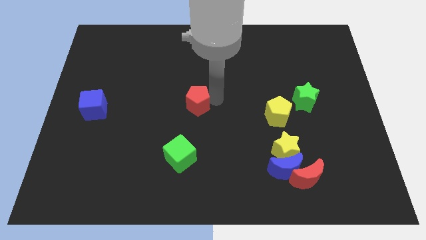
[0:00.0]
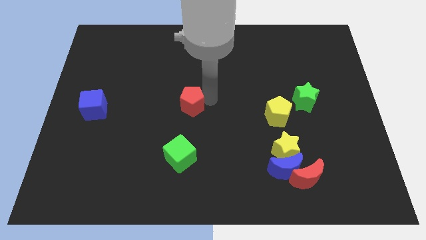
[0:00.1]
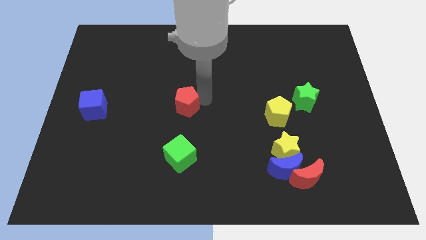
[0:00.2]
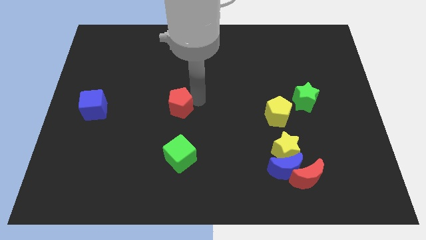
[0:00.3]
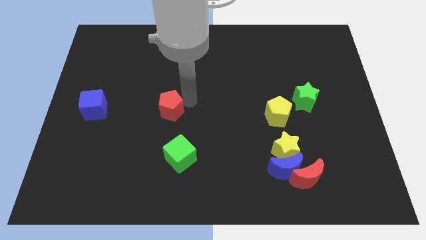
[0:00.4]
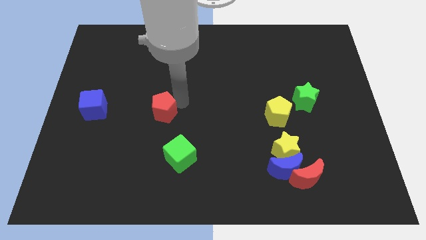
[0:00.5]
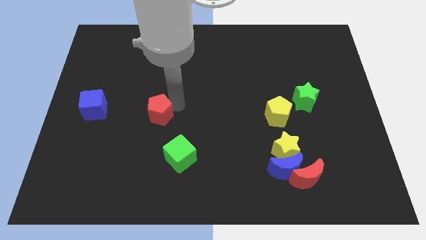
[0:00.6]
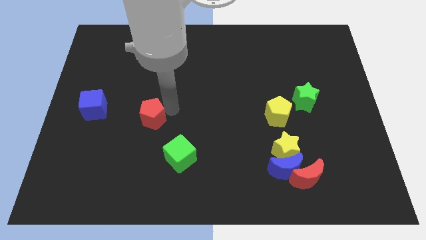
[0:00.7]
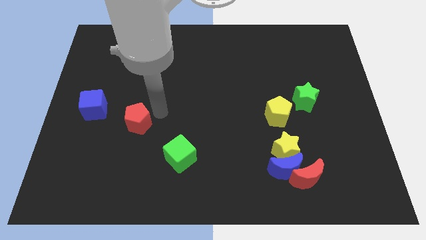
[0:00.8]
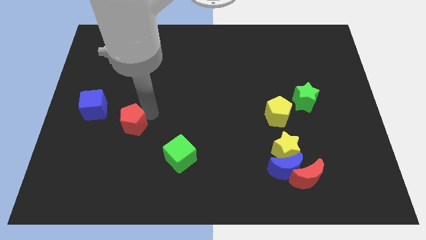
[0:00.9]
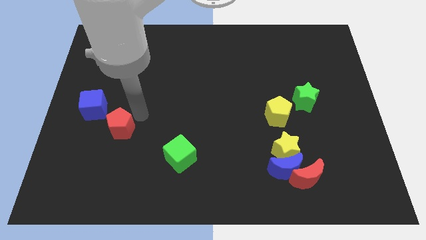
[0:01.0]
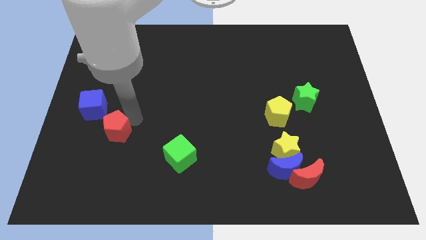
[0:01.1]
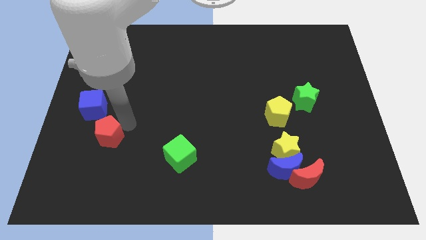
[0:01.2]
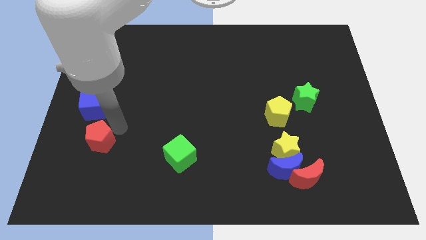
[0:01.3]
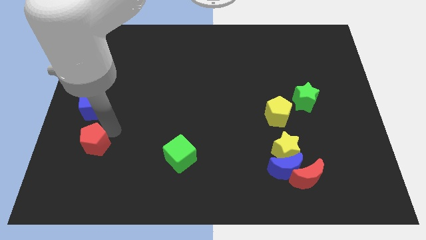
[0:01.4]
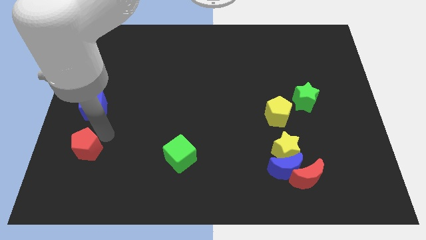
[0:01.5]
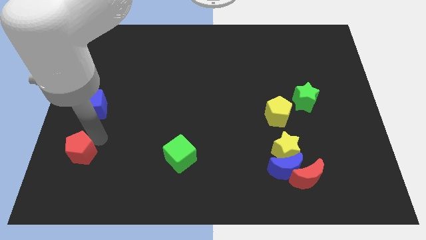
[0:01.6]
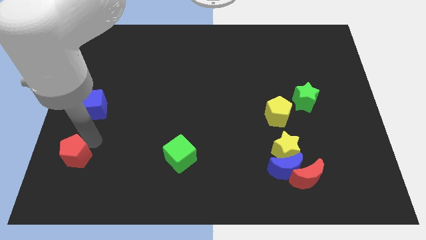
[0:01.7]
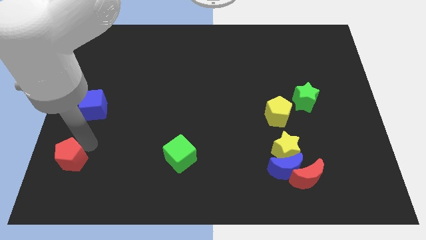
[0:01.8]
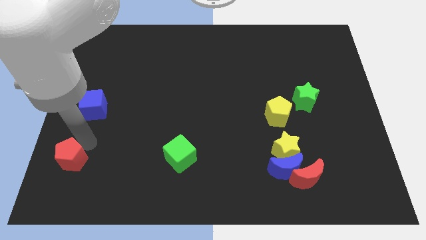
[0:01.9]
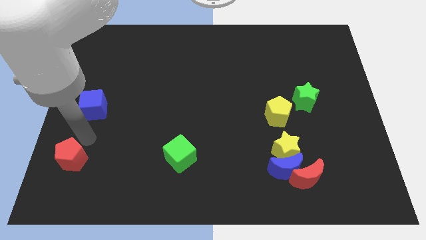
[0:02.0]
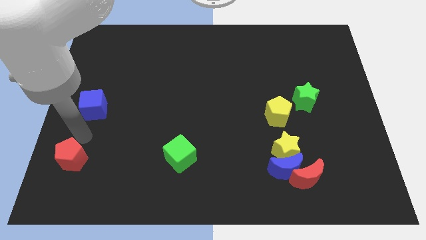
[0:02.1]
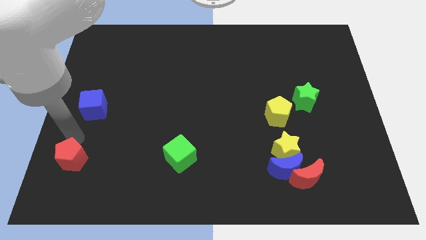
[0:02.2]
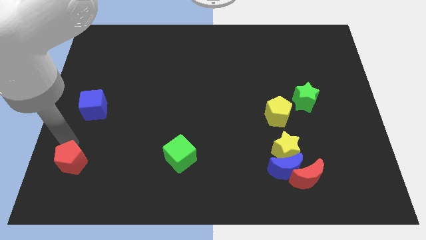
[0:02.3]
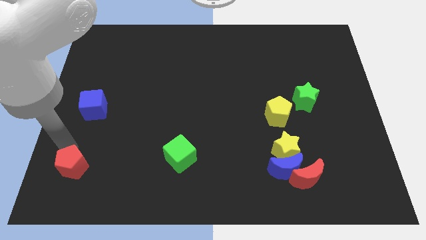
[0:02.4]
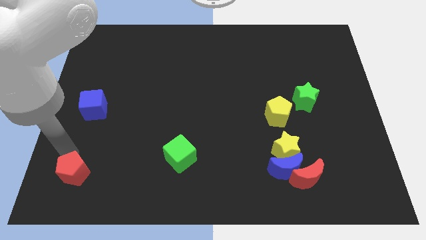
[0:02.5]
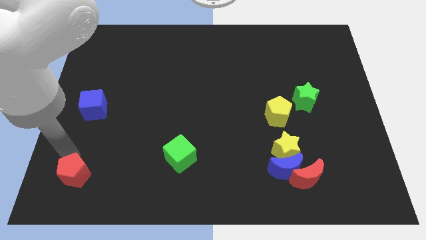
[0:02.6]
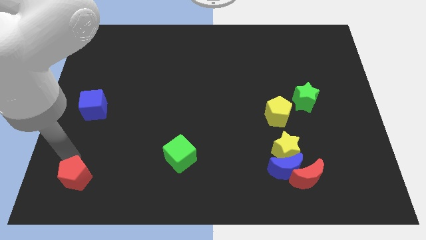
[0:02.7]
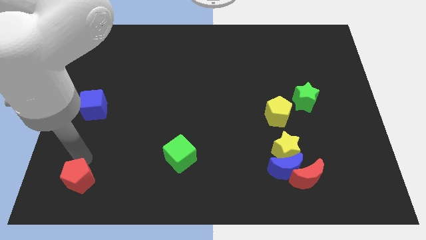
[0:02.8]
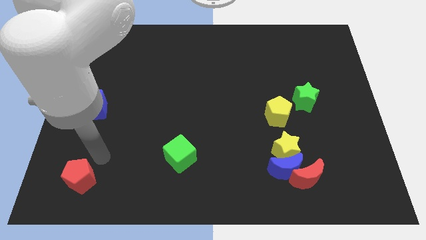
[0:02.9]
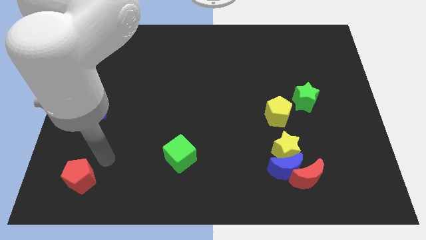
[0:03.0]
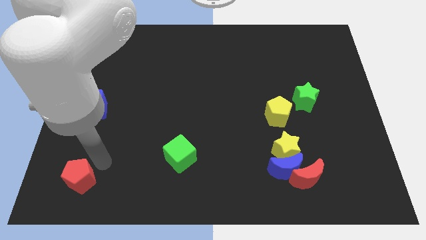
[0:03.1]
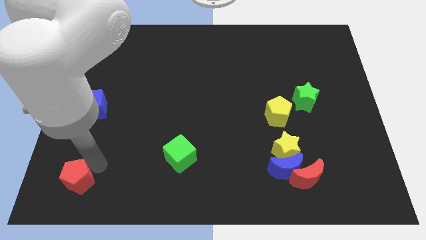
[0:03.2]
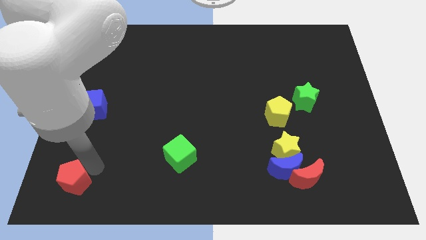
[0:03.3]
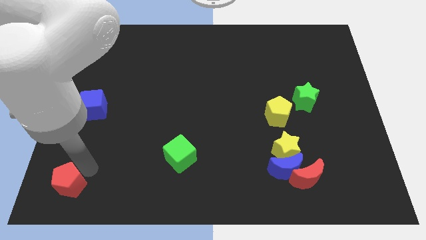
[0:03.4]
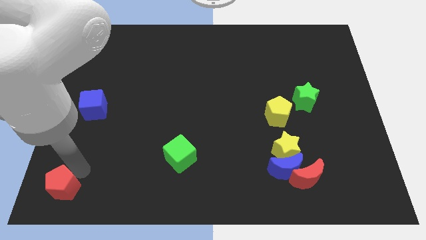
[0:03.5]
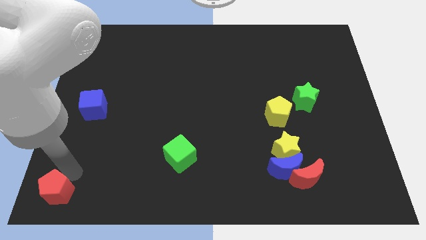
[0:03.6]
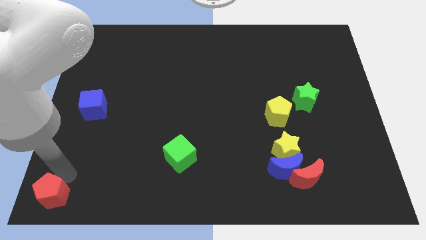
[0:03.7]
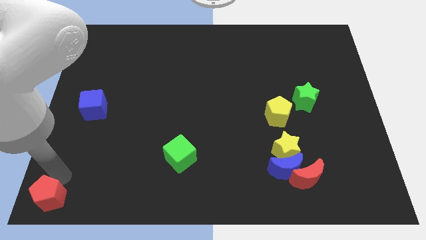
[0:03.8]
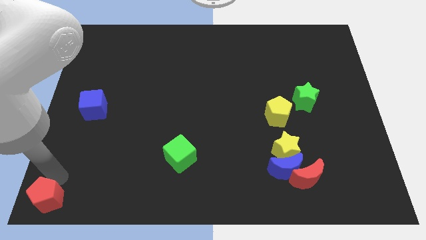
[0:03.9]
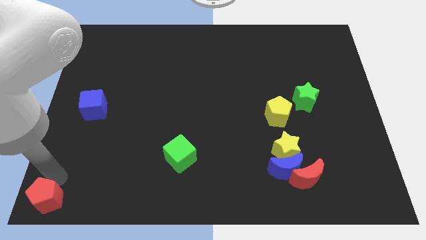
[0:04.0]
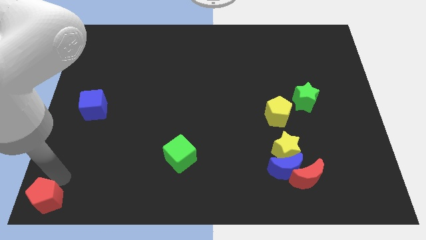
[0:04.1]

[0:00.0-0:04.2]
push the red pentagon to the bottom left to the board

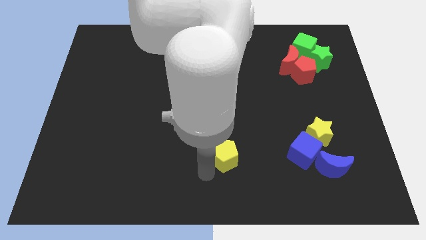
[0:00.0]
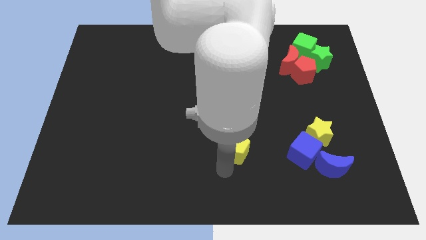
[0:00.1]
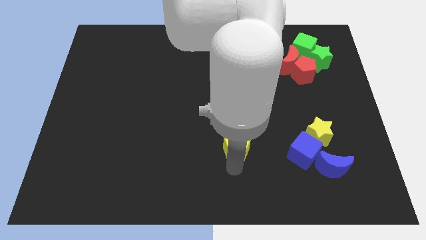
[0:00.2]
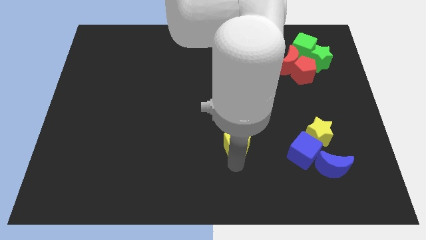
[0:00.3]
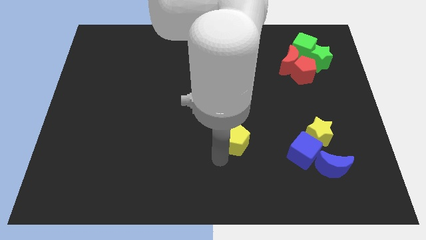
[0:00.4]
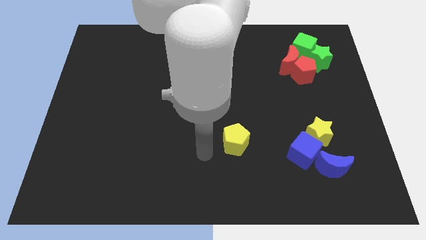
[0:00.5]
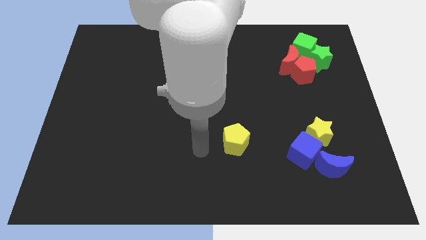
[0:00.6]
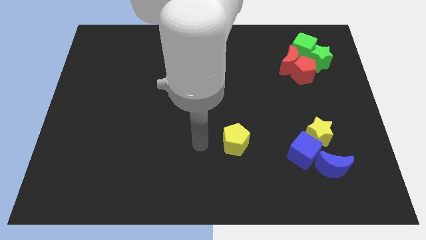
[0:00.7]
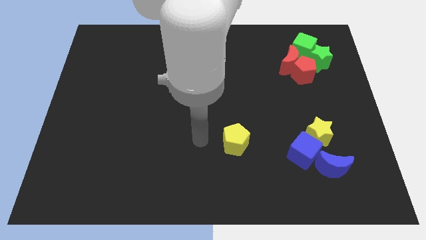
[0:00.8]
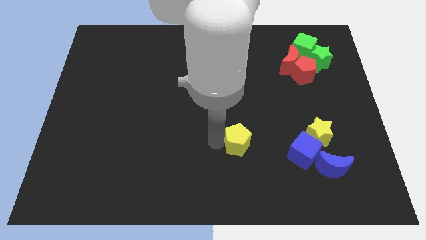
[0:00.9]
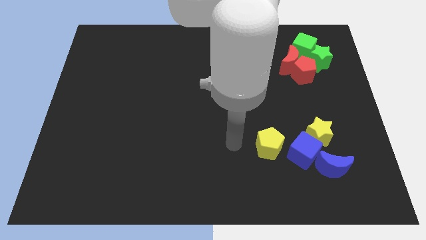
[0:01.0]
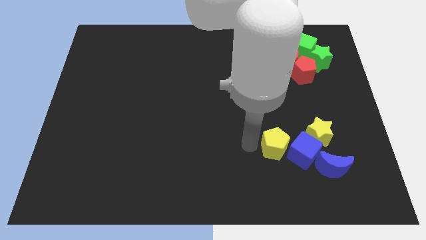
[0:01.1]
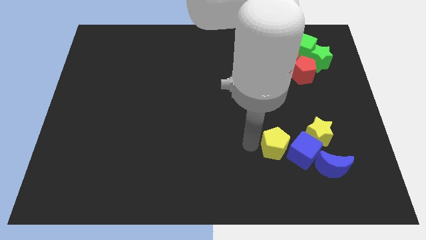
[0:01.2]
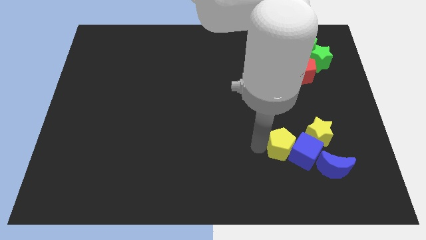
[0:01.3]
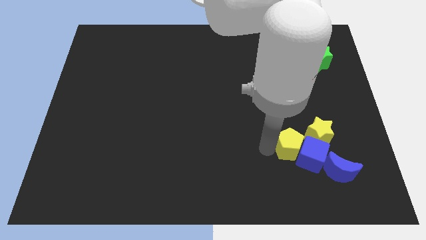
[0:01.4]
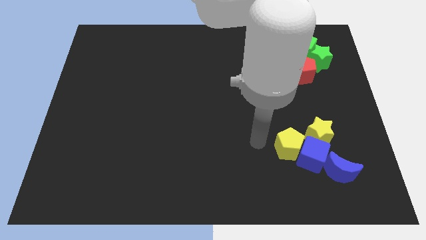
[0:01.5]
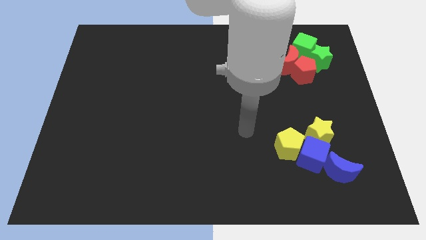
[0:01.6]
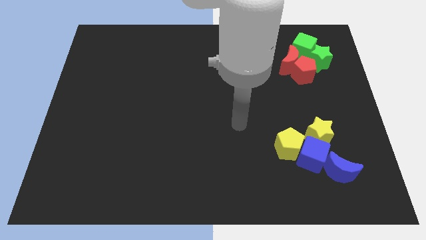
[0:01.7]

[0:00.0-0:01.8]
push the blue crescent blue cube with the yellow pentagon towards the the bottom right of the board

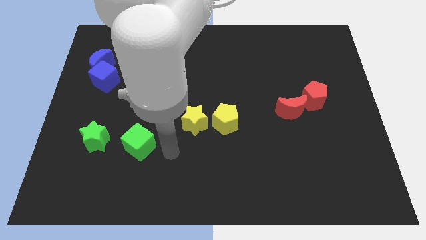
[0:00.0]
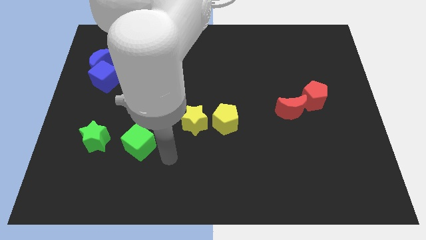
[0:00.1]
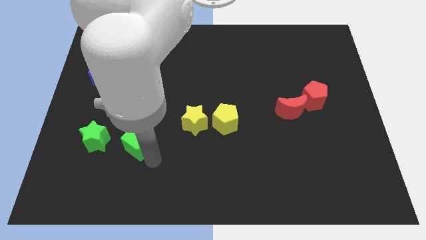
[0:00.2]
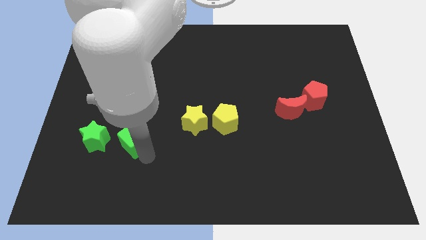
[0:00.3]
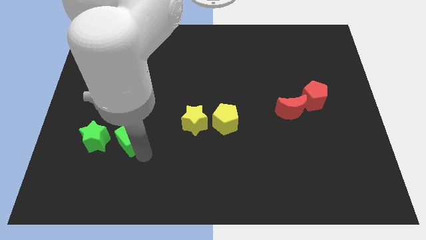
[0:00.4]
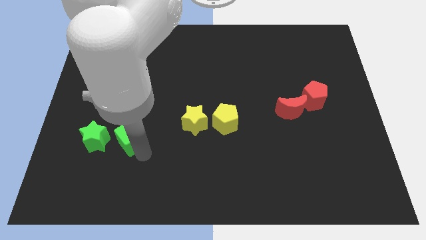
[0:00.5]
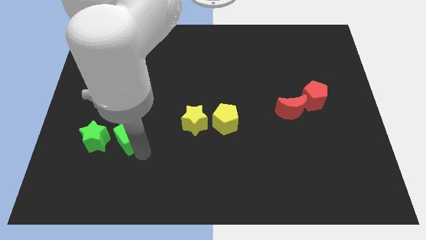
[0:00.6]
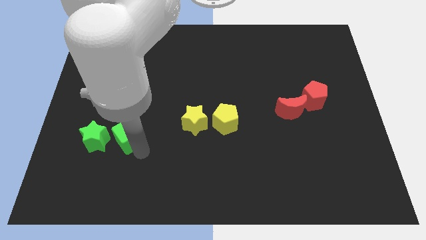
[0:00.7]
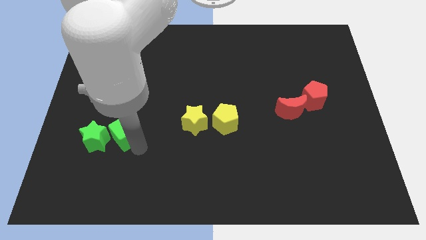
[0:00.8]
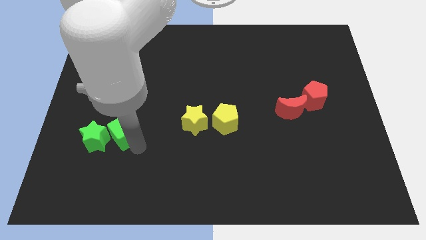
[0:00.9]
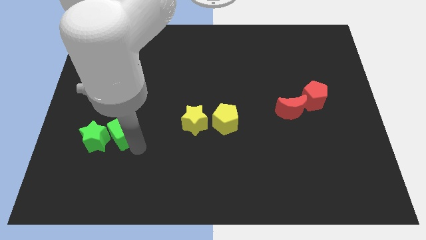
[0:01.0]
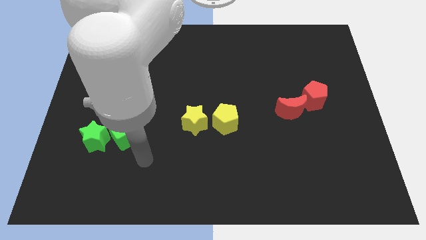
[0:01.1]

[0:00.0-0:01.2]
place green cube beside green star

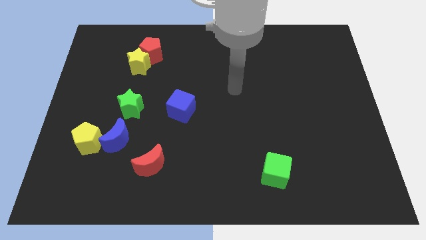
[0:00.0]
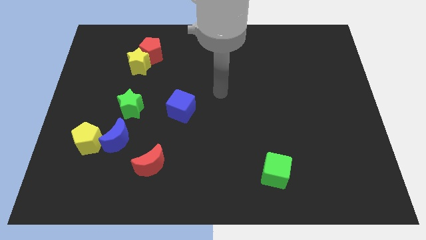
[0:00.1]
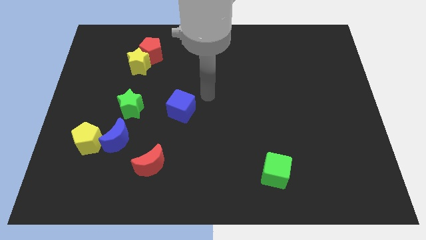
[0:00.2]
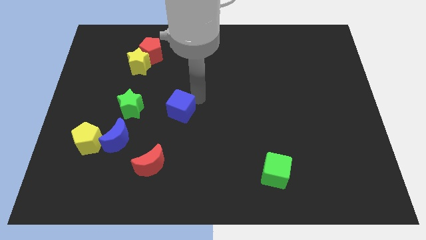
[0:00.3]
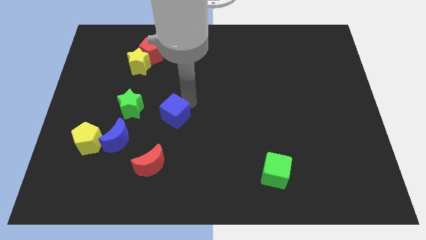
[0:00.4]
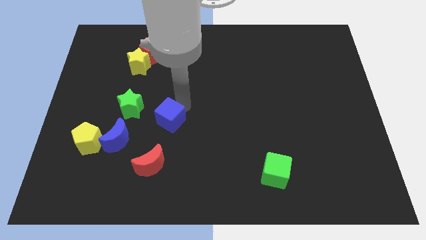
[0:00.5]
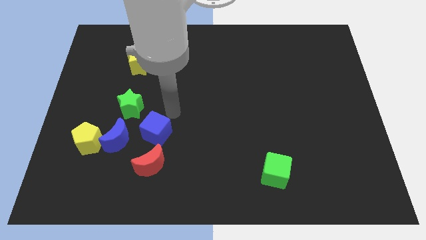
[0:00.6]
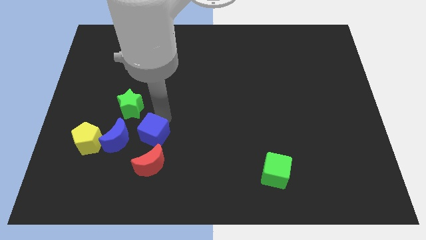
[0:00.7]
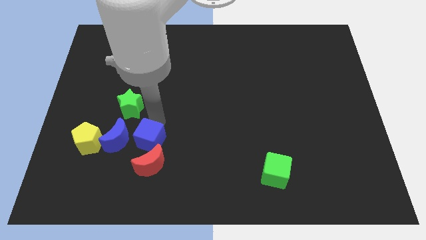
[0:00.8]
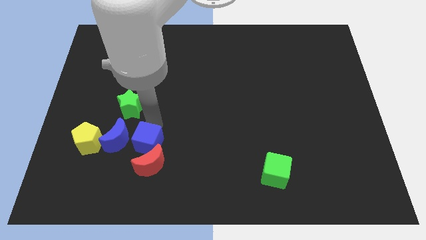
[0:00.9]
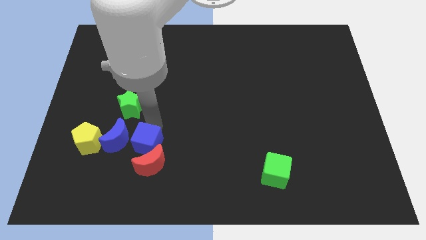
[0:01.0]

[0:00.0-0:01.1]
push the blue cube towards the red crescent

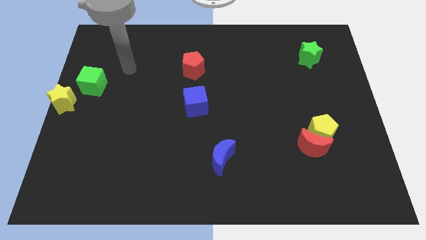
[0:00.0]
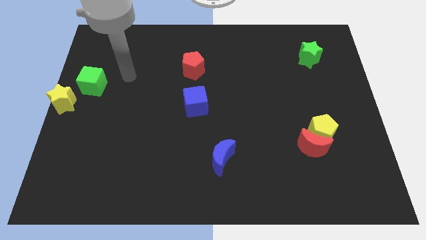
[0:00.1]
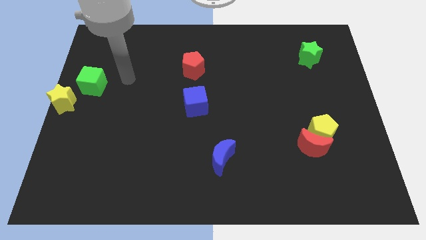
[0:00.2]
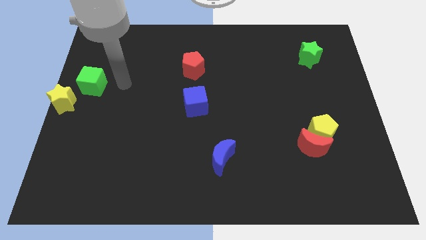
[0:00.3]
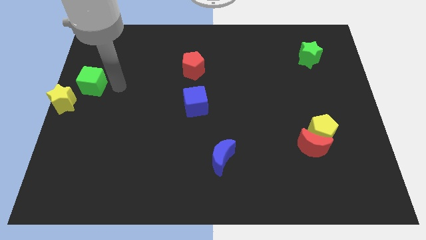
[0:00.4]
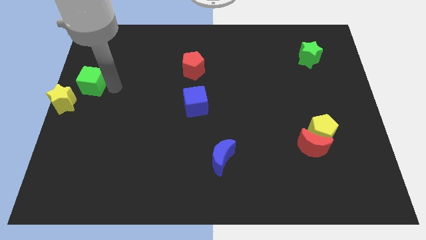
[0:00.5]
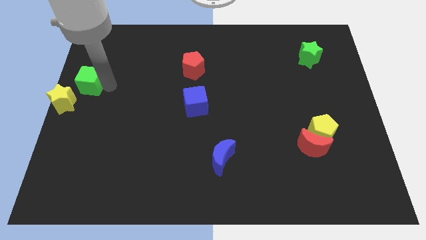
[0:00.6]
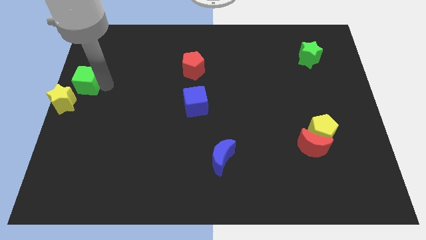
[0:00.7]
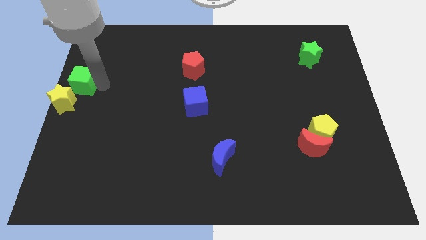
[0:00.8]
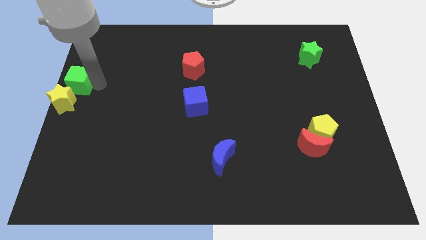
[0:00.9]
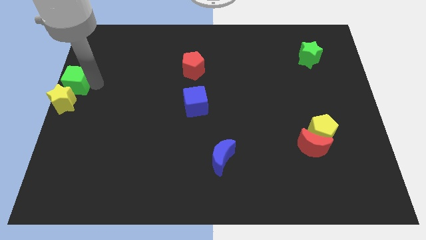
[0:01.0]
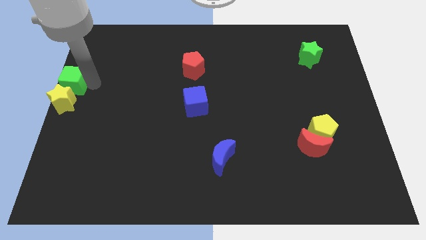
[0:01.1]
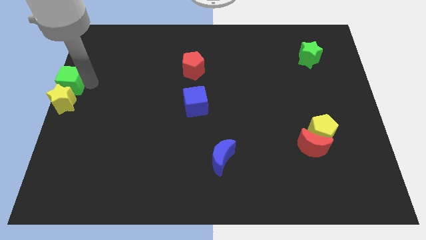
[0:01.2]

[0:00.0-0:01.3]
push the green cube to the top of the yellow star
